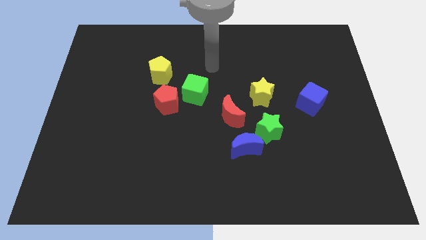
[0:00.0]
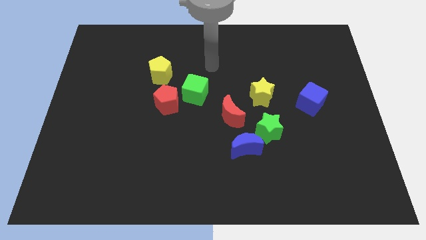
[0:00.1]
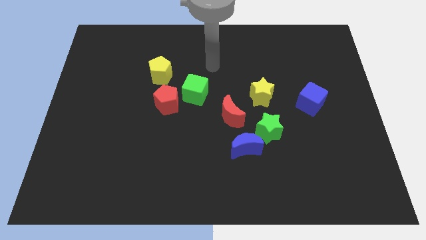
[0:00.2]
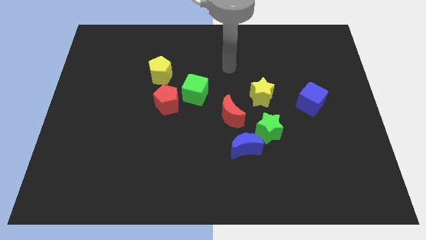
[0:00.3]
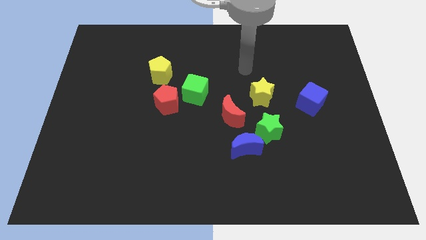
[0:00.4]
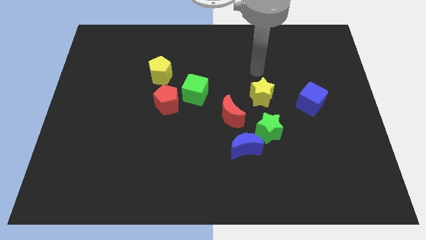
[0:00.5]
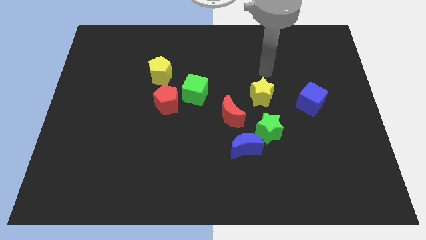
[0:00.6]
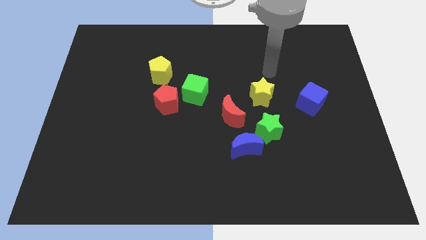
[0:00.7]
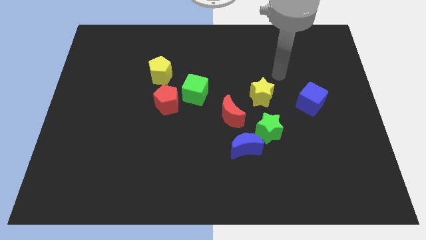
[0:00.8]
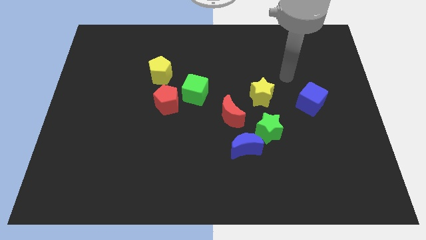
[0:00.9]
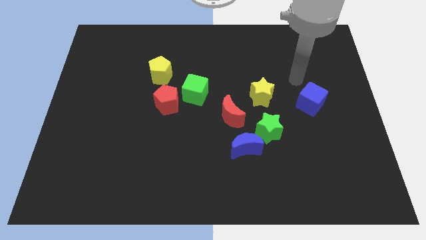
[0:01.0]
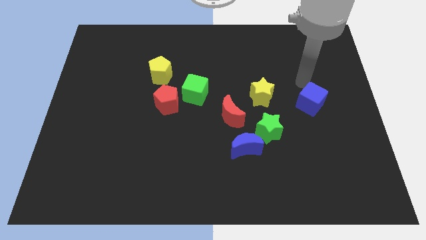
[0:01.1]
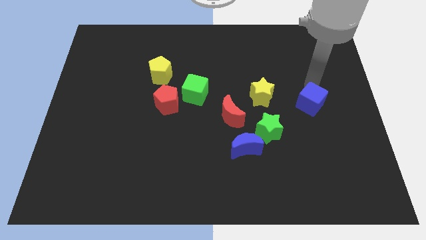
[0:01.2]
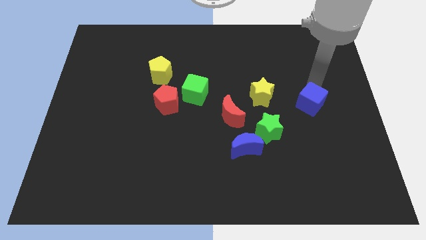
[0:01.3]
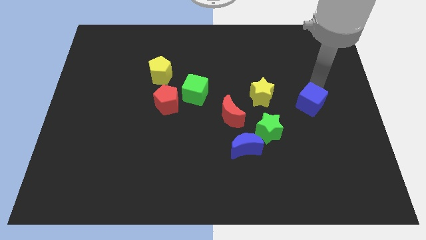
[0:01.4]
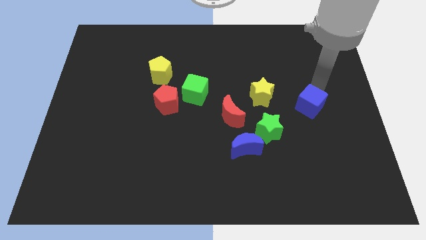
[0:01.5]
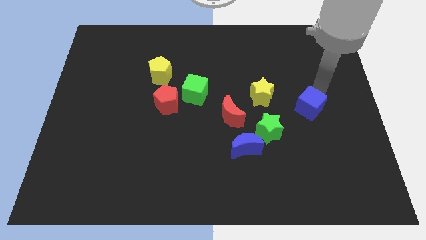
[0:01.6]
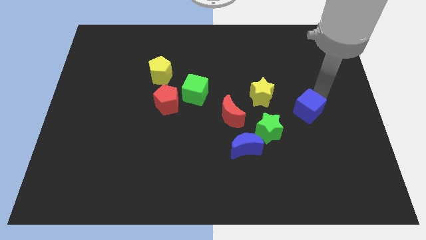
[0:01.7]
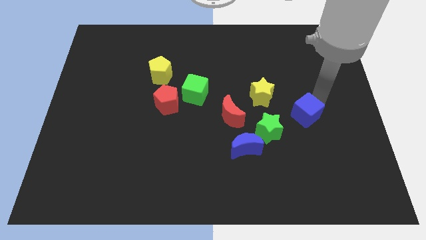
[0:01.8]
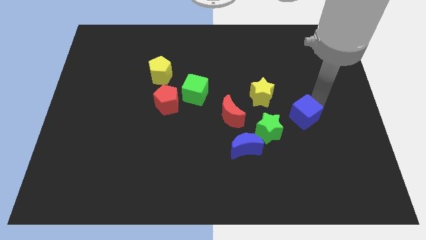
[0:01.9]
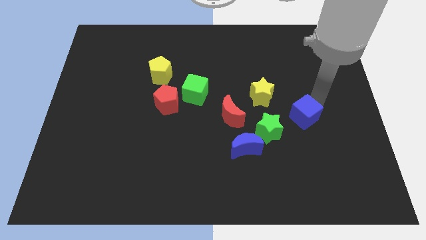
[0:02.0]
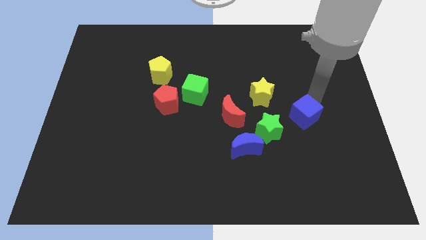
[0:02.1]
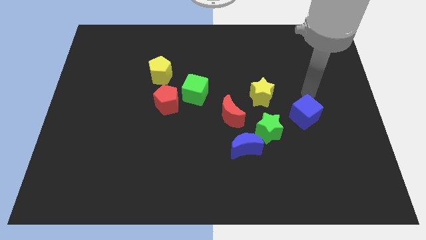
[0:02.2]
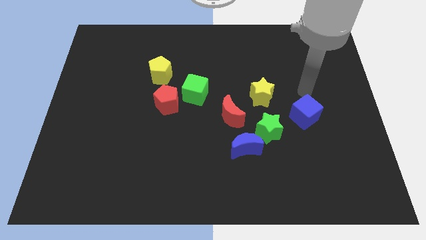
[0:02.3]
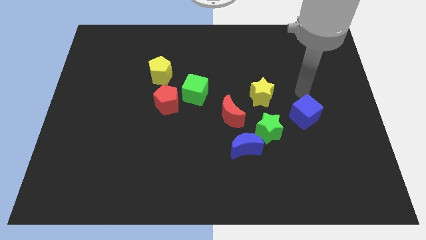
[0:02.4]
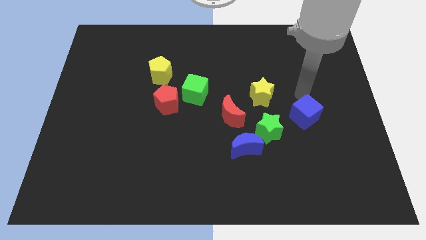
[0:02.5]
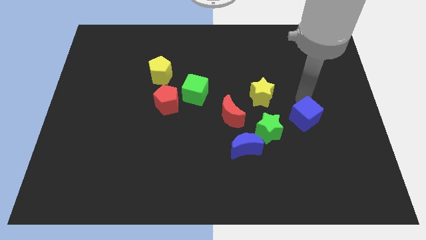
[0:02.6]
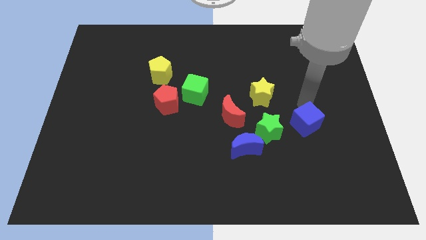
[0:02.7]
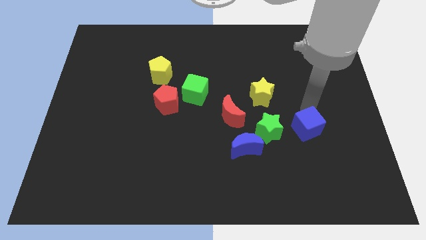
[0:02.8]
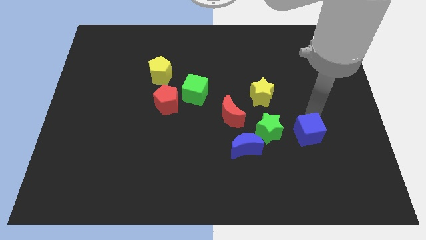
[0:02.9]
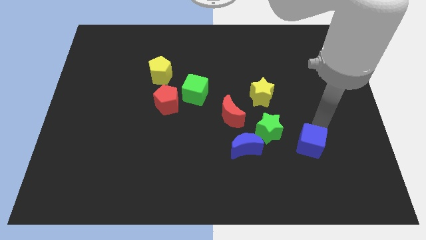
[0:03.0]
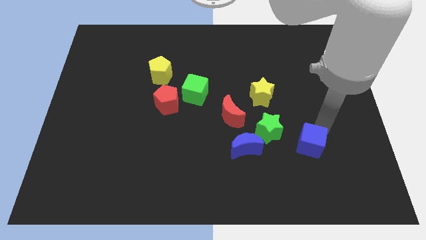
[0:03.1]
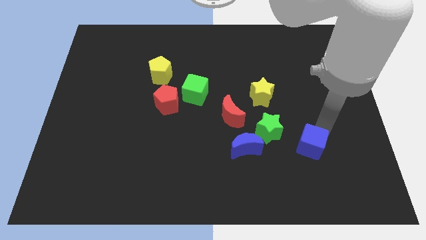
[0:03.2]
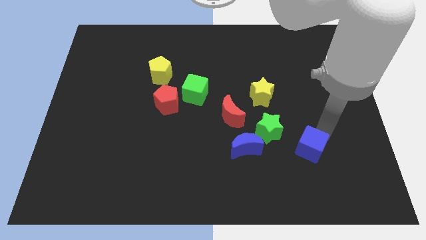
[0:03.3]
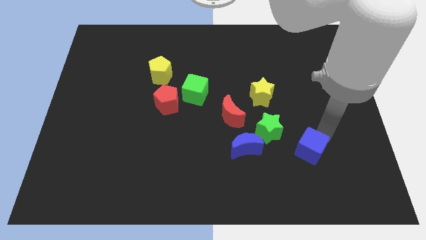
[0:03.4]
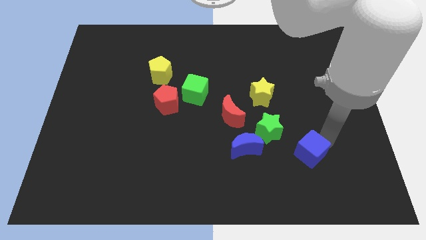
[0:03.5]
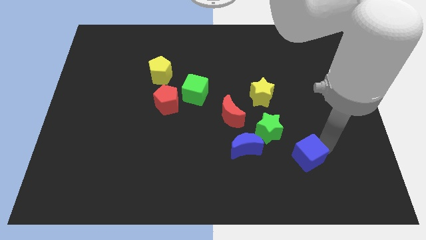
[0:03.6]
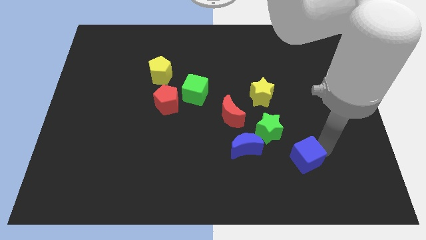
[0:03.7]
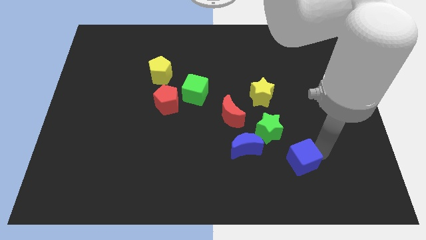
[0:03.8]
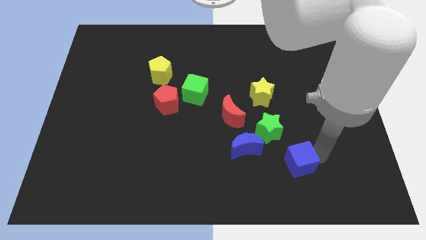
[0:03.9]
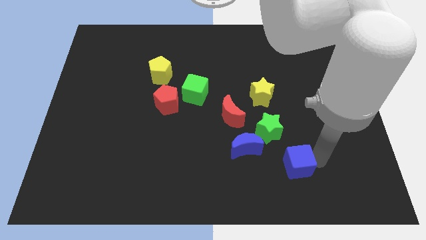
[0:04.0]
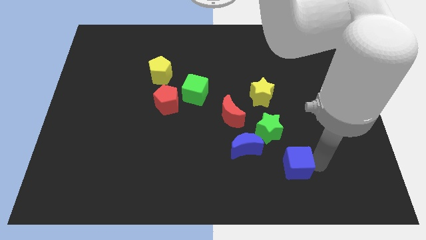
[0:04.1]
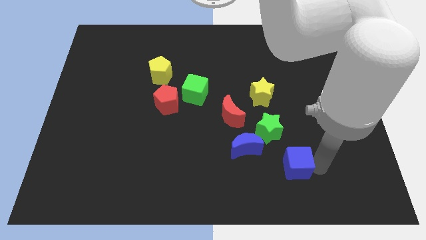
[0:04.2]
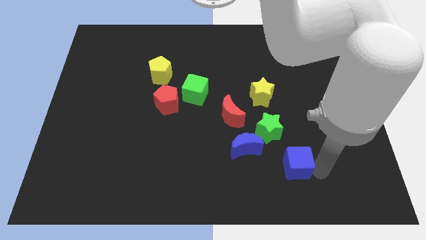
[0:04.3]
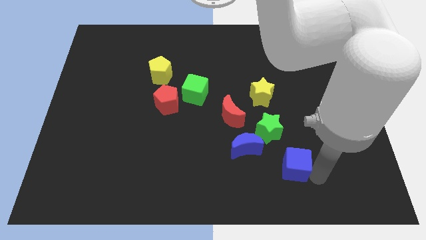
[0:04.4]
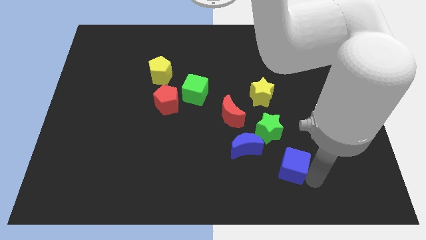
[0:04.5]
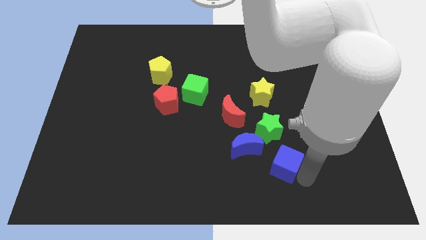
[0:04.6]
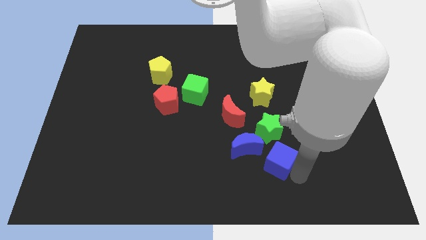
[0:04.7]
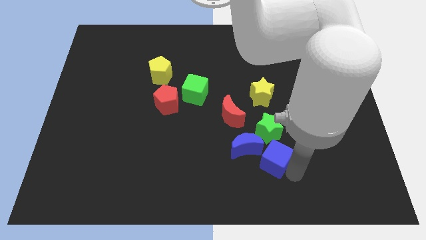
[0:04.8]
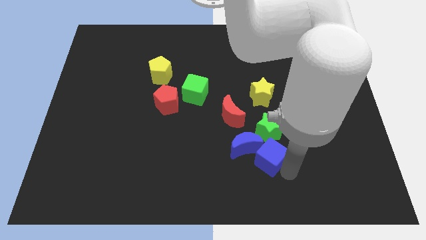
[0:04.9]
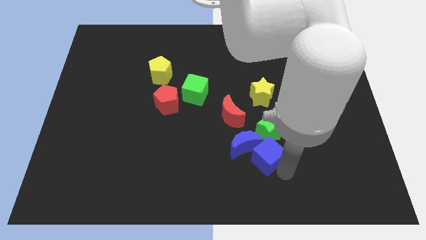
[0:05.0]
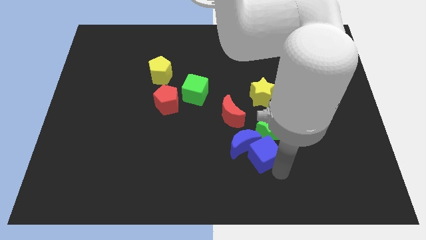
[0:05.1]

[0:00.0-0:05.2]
move the blue cube close to the blue moon

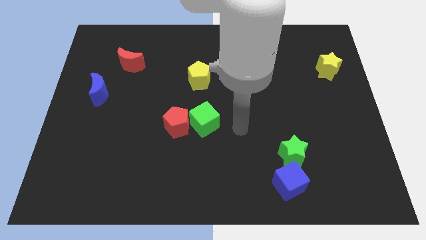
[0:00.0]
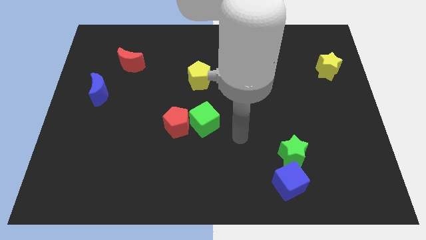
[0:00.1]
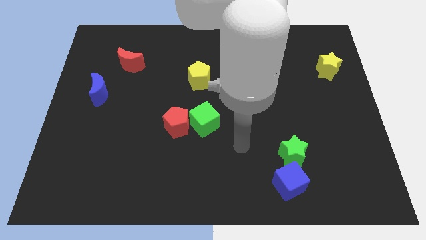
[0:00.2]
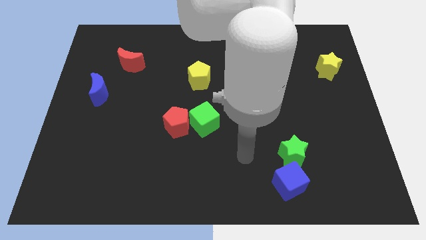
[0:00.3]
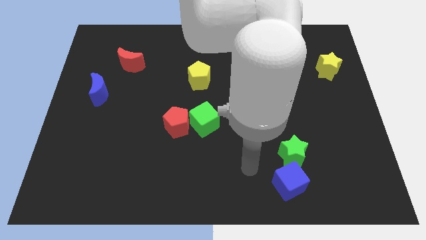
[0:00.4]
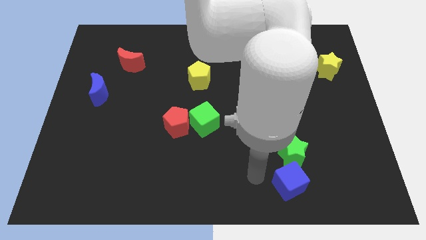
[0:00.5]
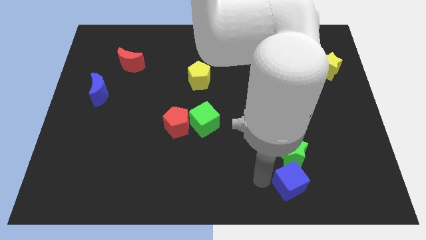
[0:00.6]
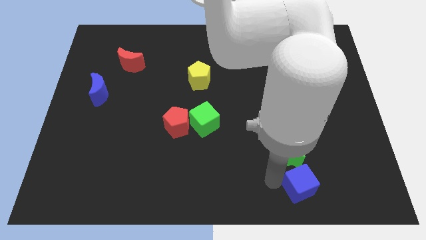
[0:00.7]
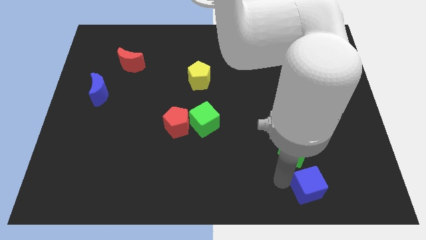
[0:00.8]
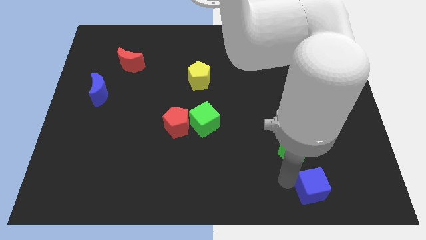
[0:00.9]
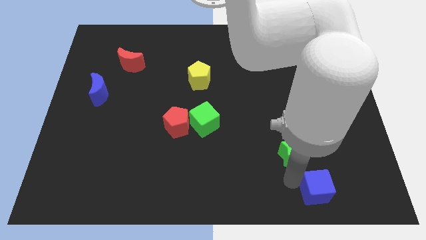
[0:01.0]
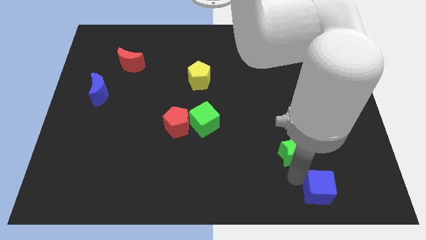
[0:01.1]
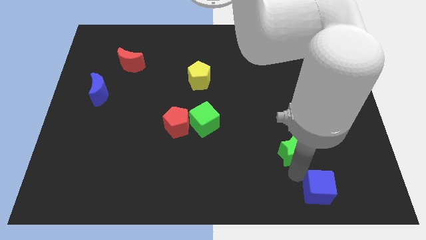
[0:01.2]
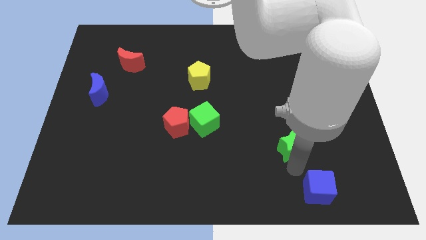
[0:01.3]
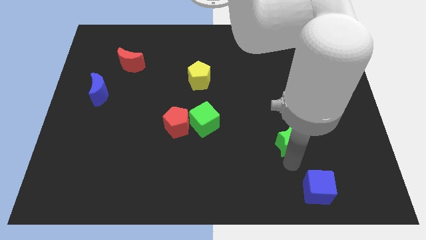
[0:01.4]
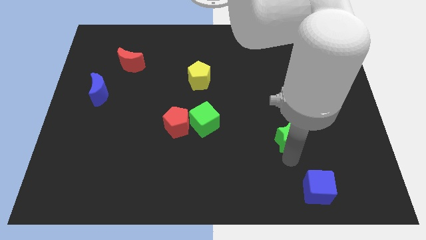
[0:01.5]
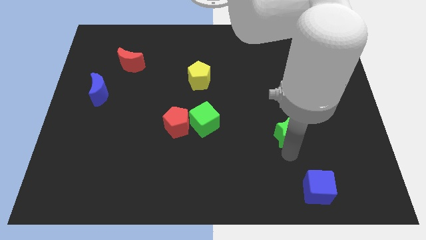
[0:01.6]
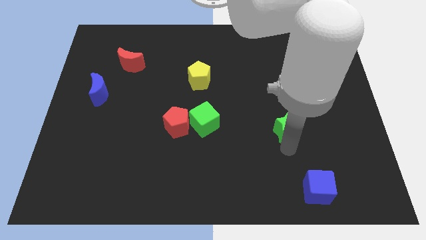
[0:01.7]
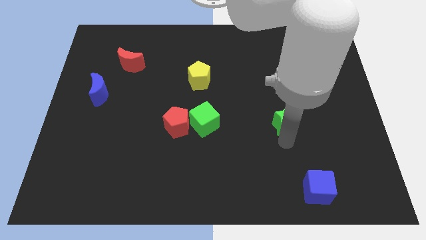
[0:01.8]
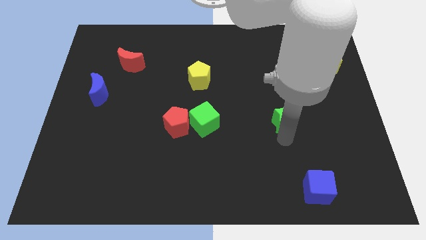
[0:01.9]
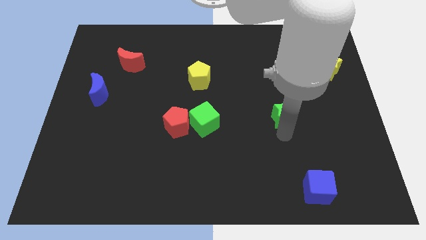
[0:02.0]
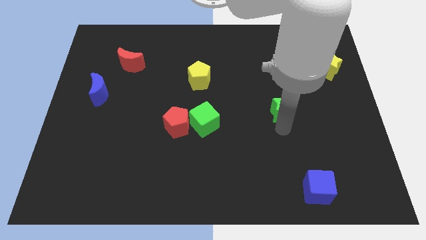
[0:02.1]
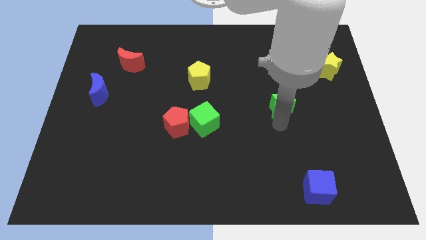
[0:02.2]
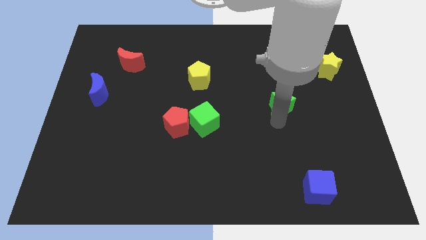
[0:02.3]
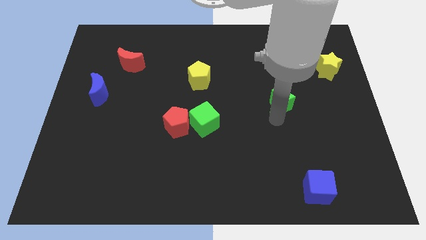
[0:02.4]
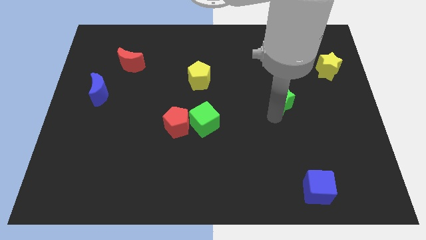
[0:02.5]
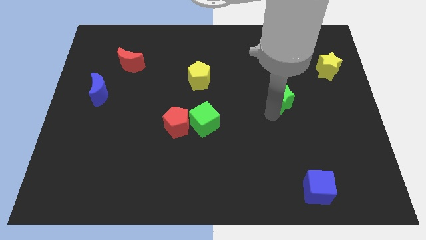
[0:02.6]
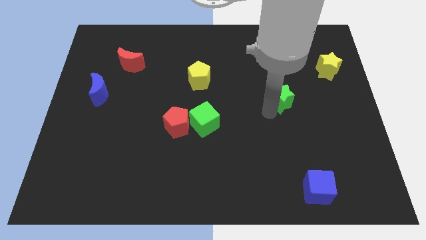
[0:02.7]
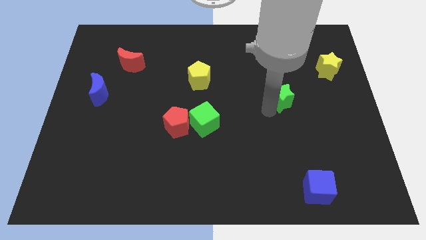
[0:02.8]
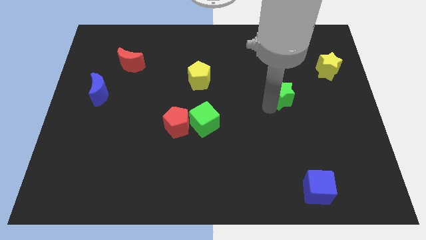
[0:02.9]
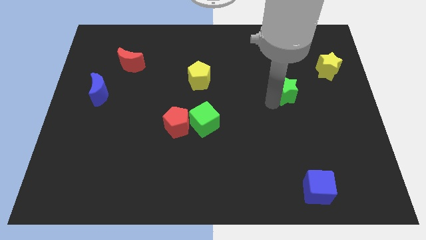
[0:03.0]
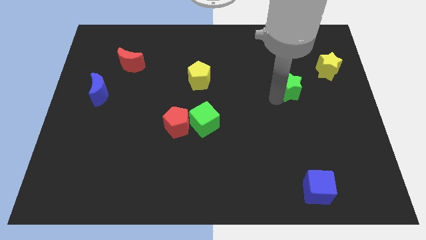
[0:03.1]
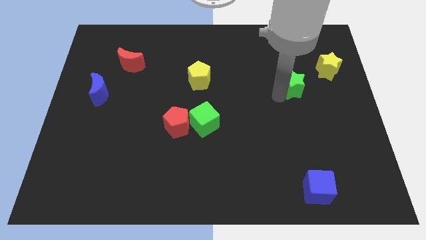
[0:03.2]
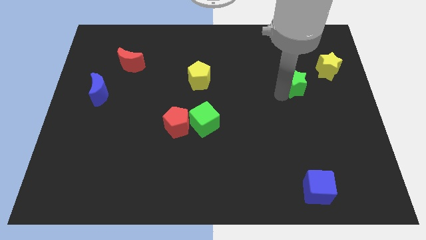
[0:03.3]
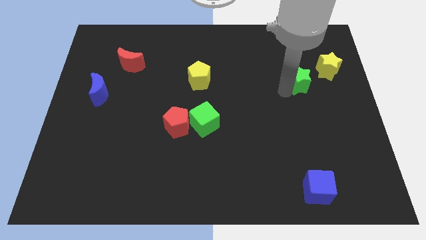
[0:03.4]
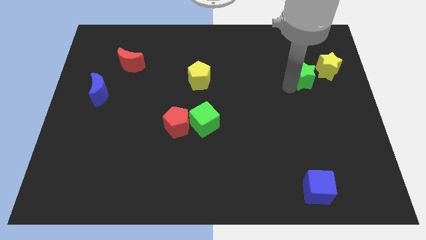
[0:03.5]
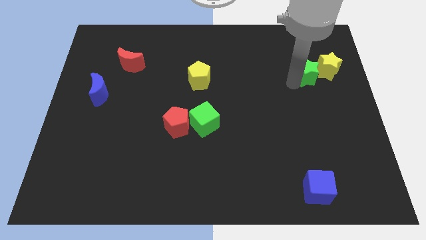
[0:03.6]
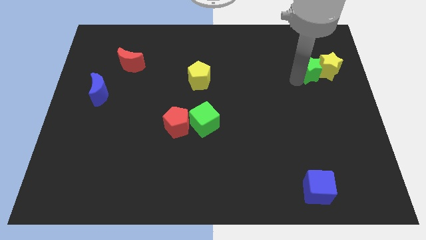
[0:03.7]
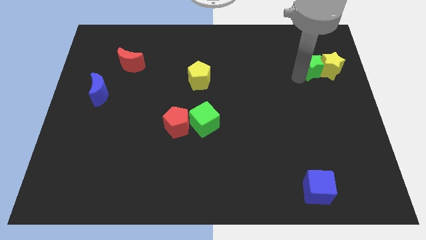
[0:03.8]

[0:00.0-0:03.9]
put the green star close to the yellow star
